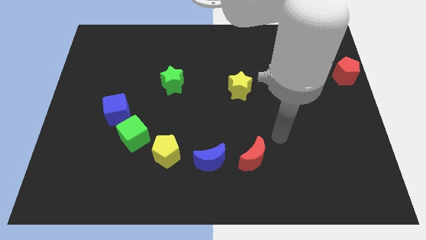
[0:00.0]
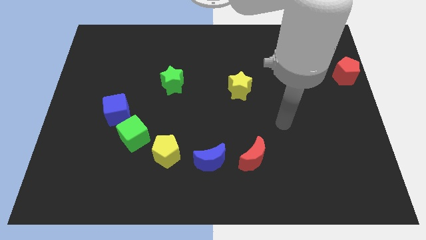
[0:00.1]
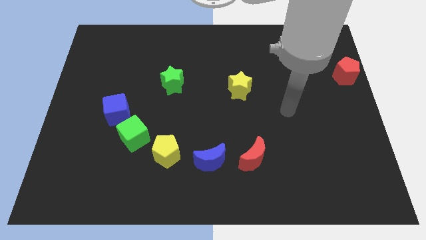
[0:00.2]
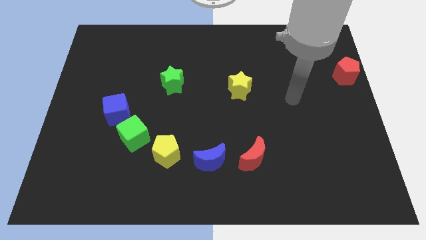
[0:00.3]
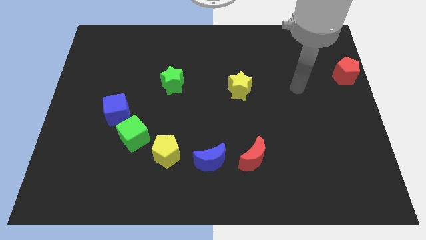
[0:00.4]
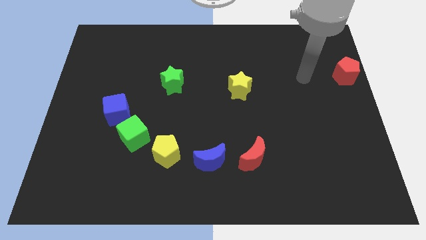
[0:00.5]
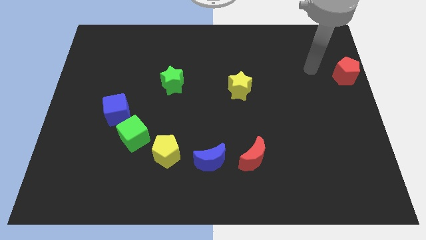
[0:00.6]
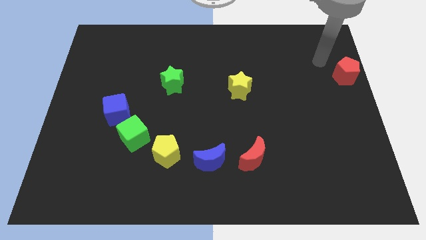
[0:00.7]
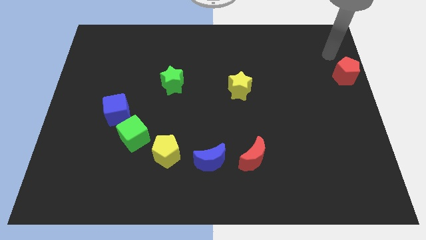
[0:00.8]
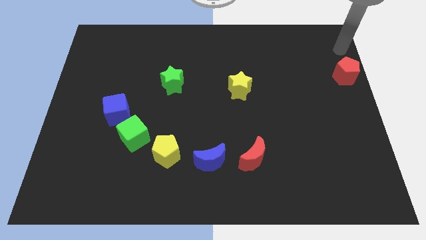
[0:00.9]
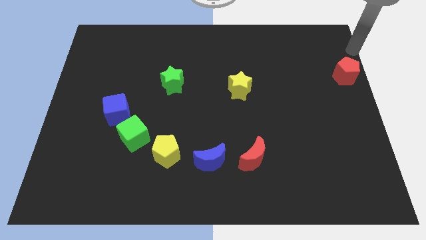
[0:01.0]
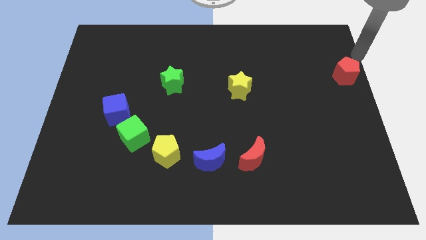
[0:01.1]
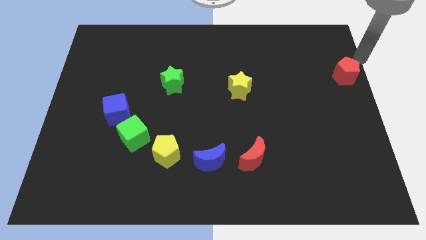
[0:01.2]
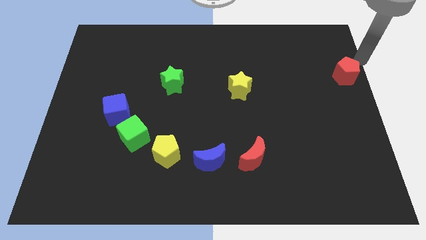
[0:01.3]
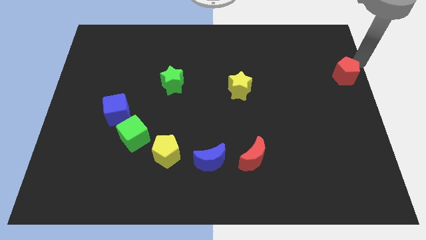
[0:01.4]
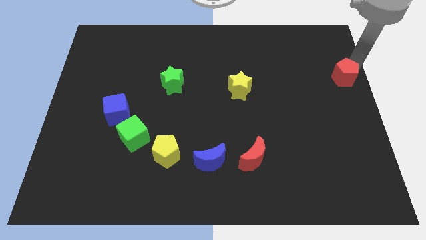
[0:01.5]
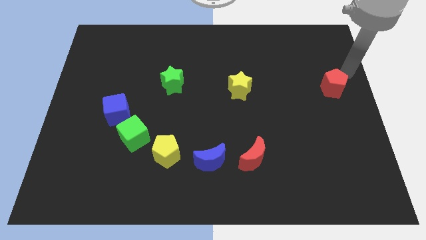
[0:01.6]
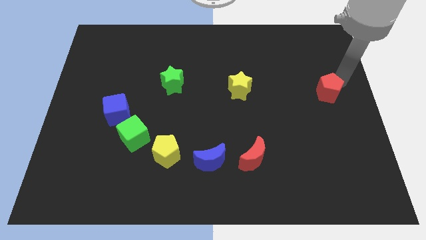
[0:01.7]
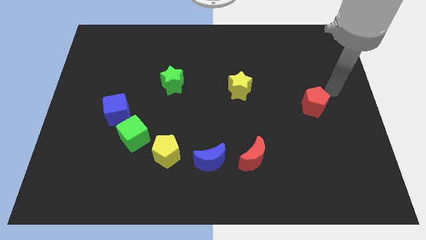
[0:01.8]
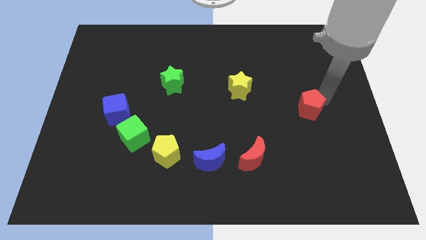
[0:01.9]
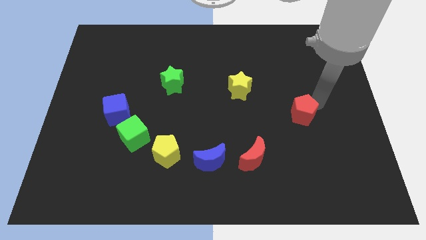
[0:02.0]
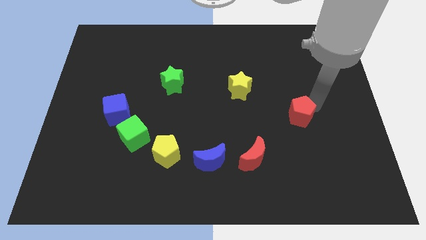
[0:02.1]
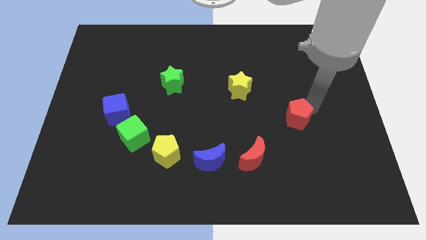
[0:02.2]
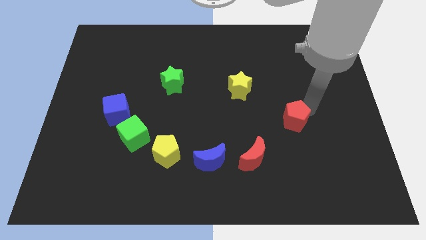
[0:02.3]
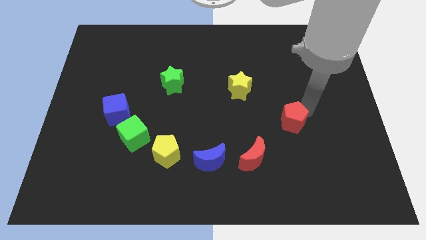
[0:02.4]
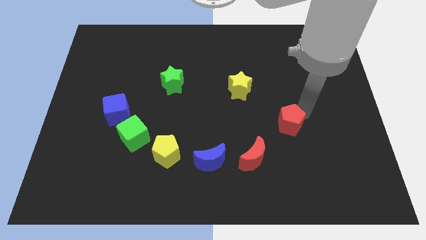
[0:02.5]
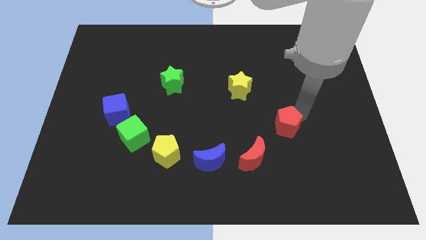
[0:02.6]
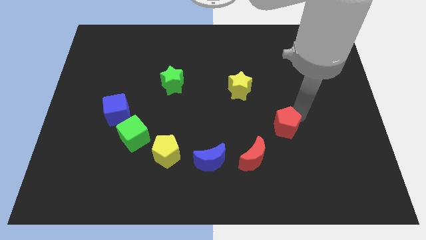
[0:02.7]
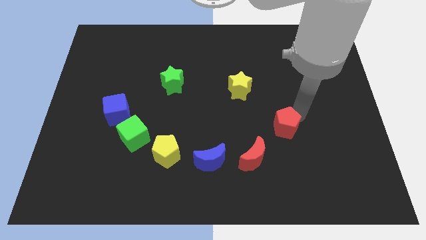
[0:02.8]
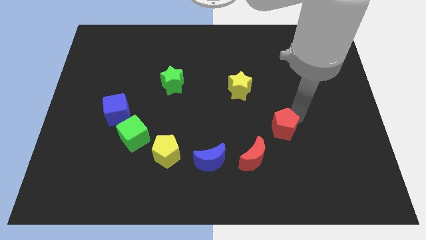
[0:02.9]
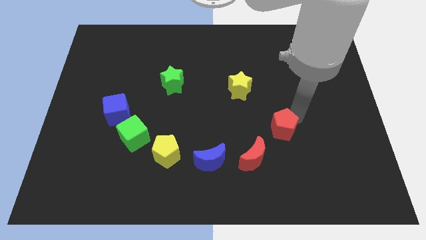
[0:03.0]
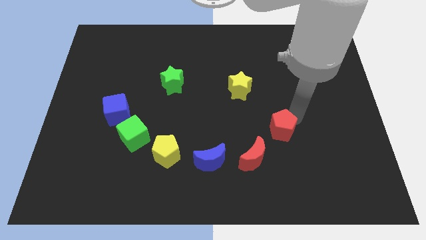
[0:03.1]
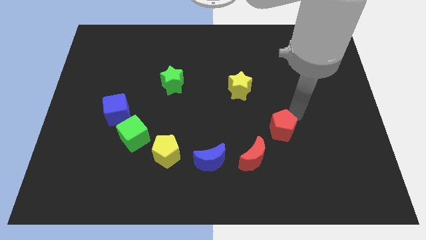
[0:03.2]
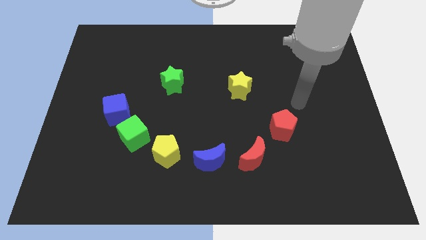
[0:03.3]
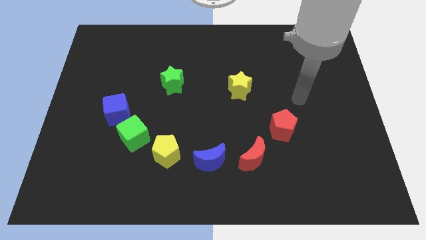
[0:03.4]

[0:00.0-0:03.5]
put the red pentagon to the top right side of the red crescent

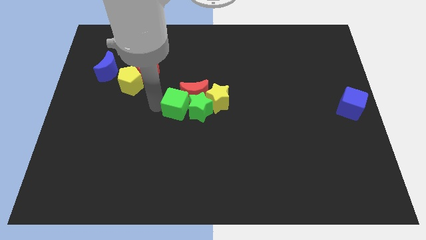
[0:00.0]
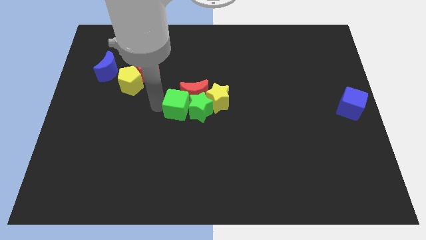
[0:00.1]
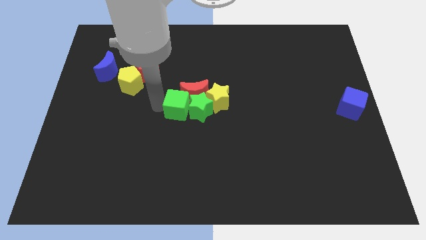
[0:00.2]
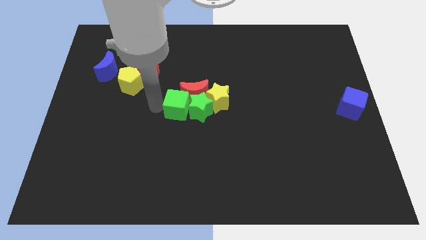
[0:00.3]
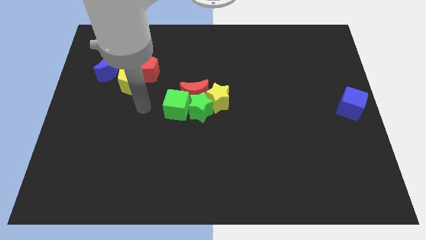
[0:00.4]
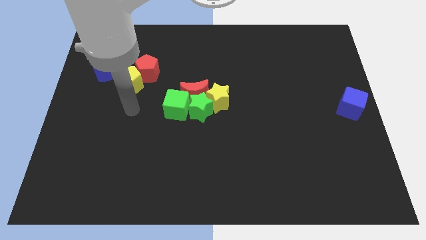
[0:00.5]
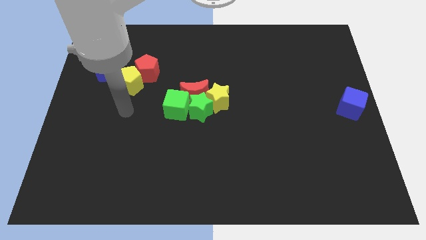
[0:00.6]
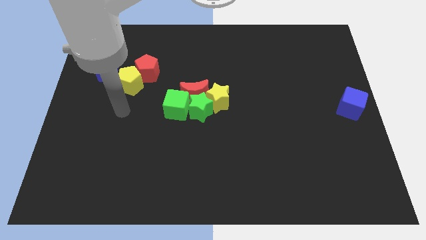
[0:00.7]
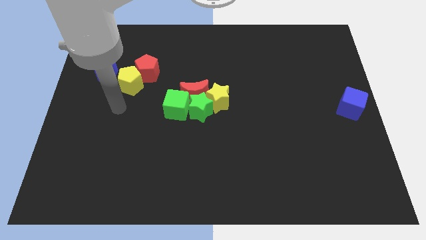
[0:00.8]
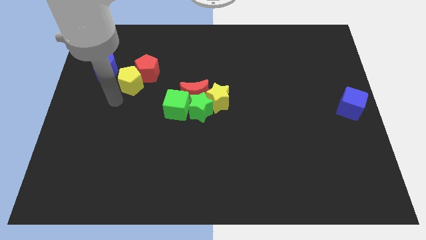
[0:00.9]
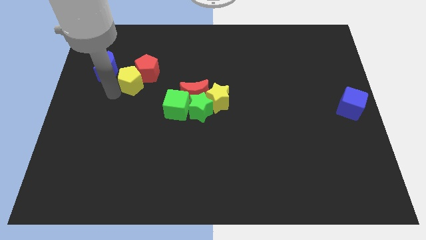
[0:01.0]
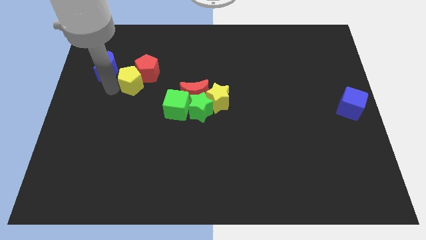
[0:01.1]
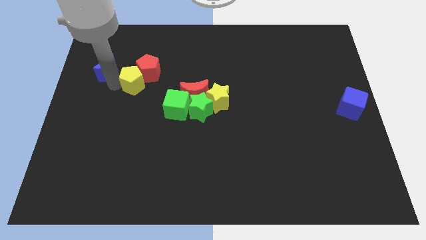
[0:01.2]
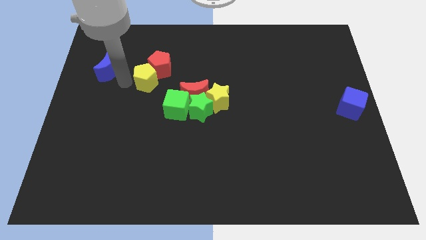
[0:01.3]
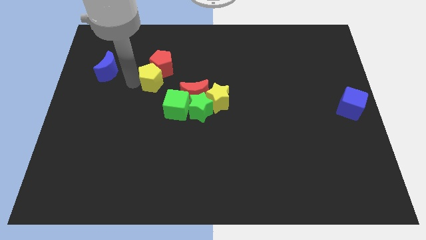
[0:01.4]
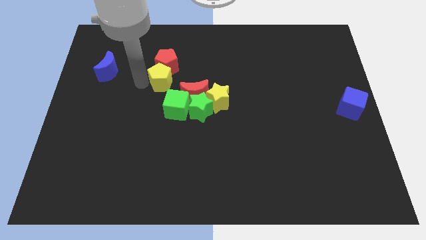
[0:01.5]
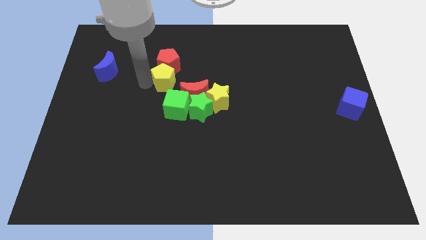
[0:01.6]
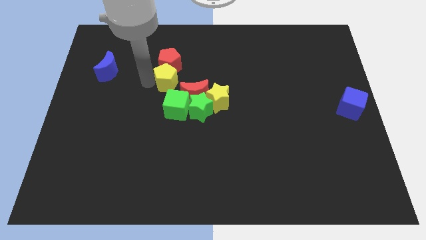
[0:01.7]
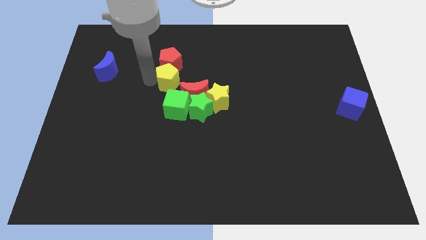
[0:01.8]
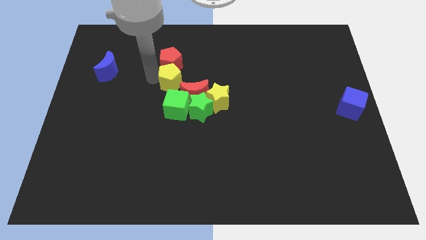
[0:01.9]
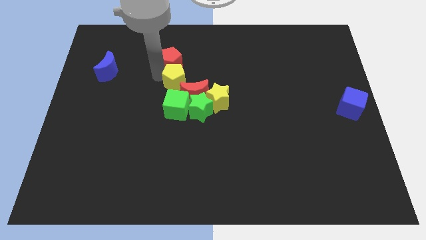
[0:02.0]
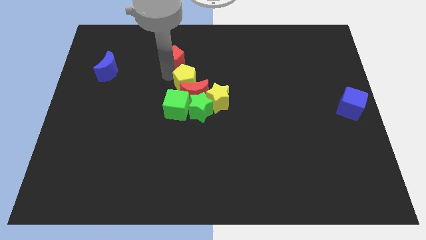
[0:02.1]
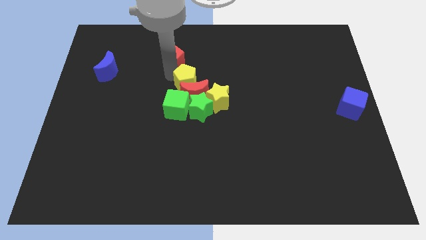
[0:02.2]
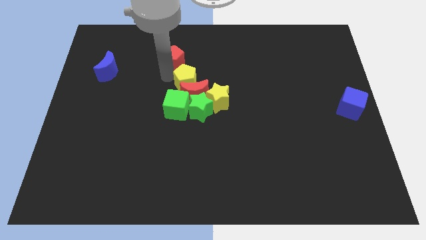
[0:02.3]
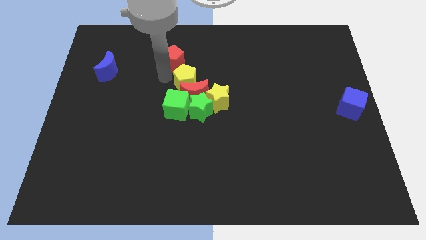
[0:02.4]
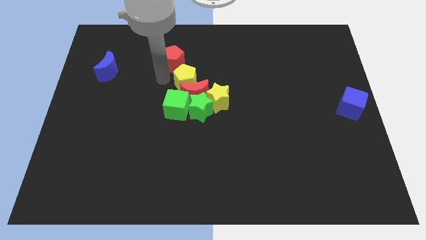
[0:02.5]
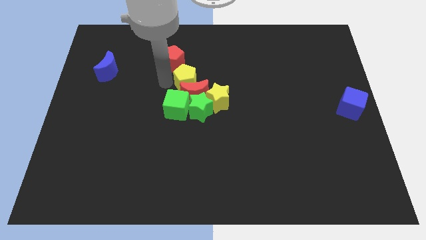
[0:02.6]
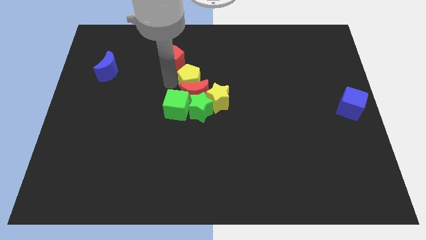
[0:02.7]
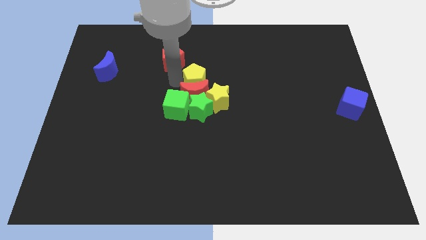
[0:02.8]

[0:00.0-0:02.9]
push yellow pentagon above red moon

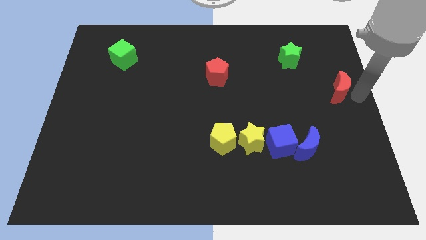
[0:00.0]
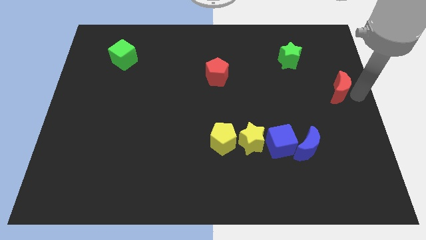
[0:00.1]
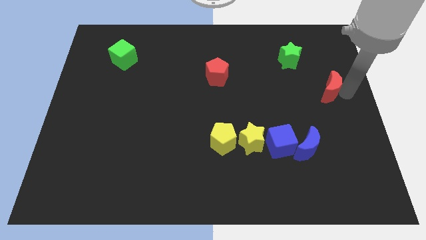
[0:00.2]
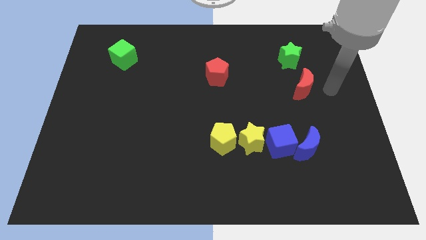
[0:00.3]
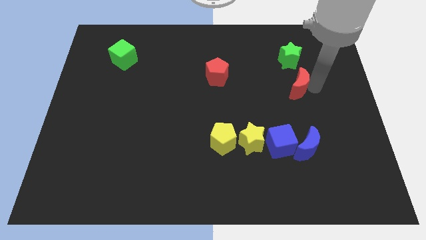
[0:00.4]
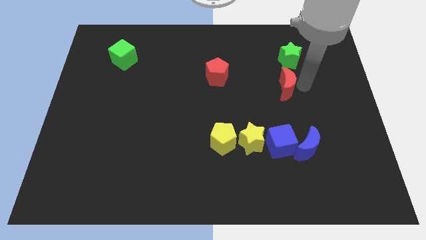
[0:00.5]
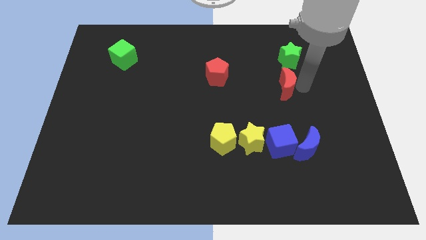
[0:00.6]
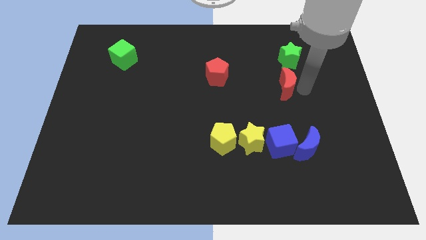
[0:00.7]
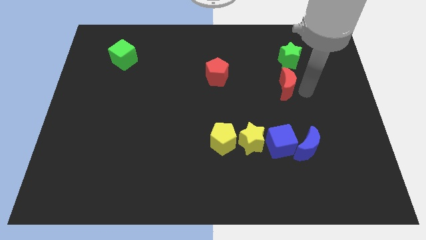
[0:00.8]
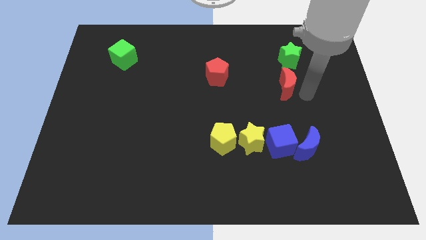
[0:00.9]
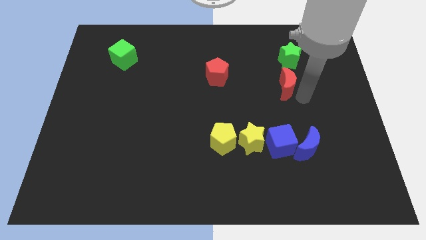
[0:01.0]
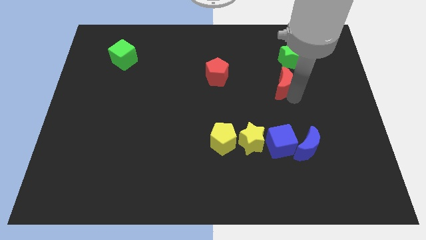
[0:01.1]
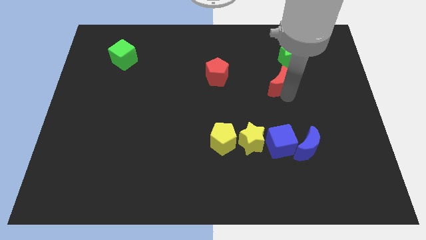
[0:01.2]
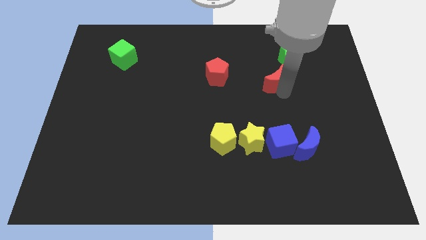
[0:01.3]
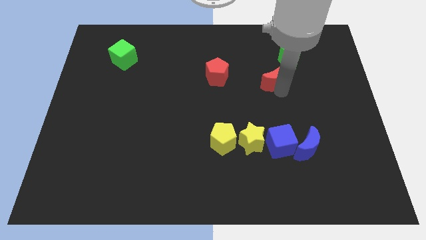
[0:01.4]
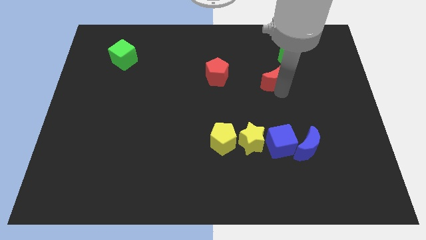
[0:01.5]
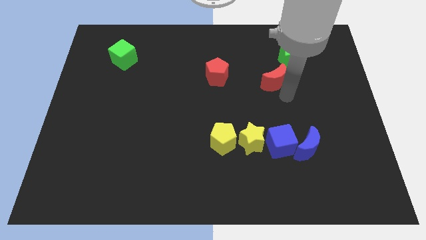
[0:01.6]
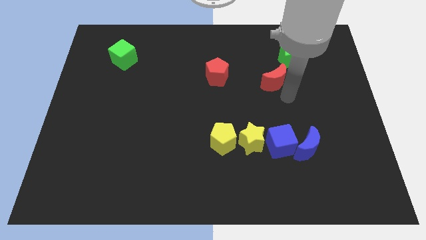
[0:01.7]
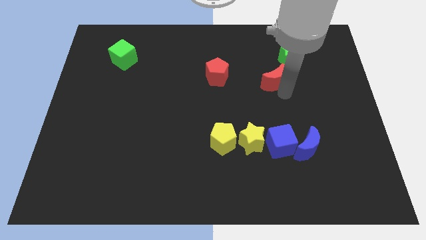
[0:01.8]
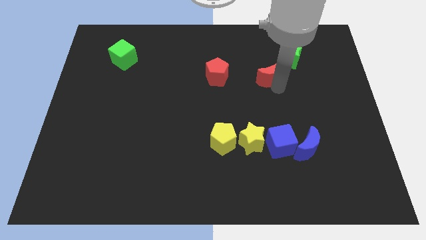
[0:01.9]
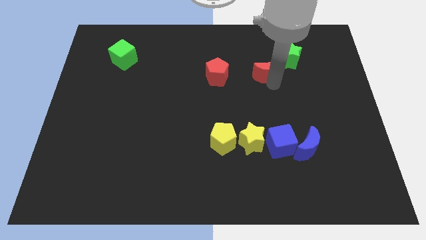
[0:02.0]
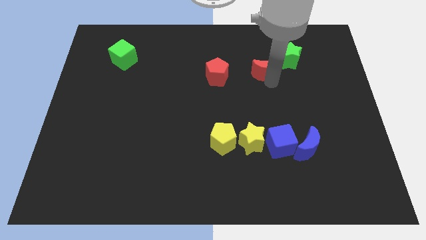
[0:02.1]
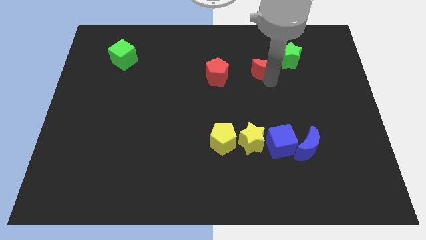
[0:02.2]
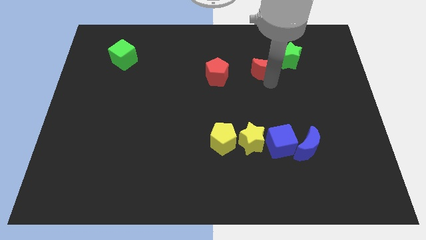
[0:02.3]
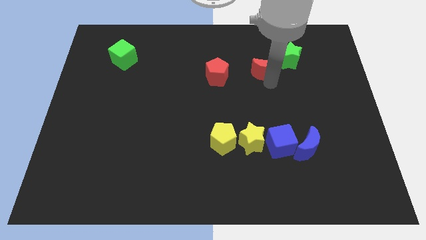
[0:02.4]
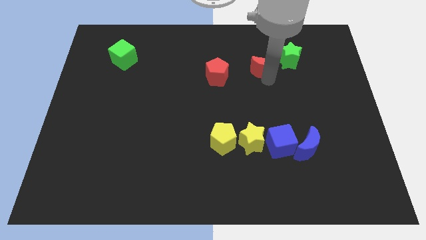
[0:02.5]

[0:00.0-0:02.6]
place the red moon in between the red pentagon and green star
